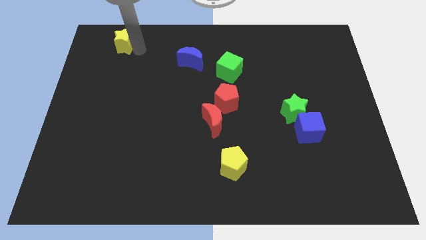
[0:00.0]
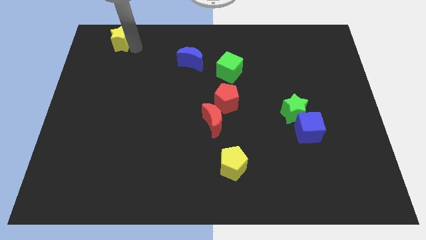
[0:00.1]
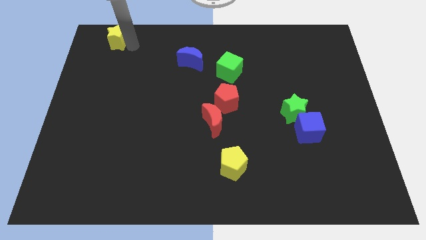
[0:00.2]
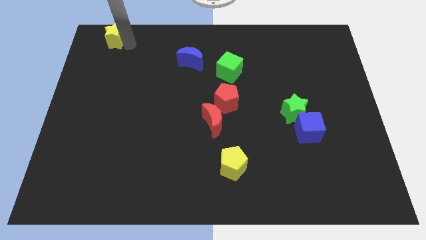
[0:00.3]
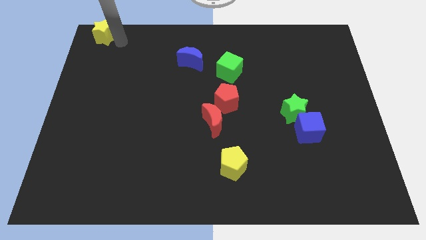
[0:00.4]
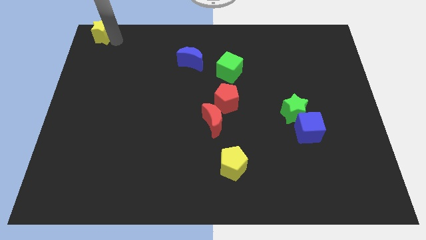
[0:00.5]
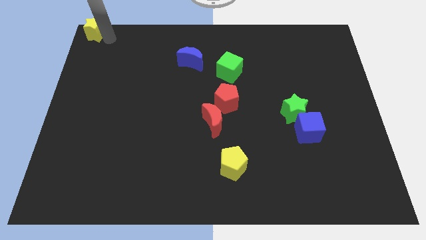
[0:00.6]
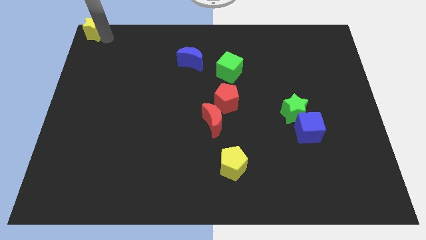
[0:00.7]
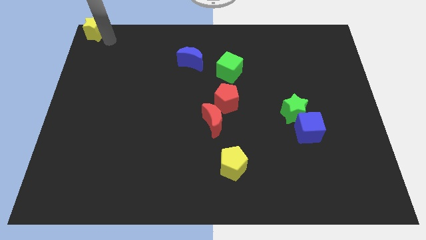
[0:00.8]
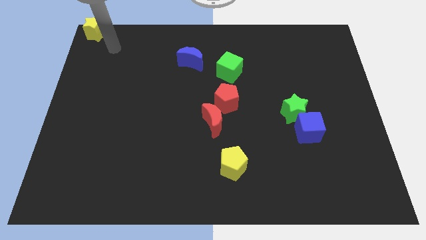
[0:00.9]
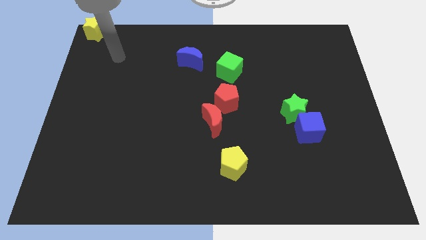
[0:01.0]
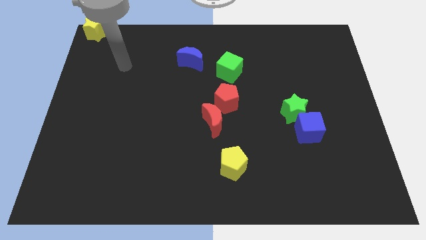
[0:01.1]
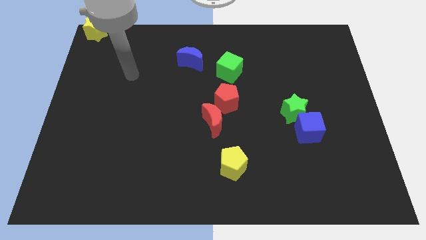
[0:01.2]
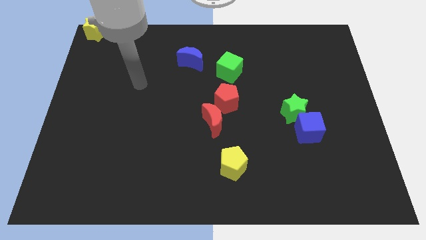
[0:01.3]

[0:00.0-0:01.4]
place the yellow star at the top left corner of the board

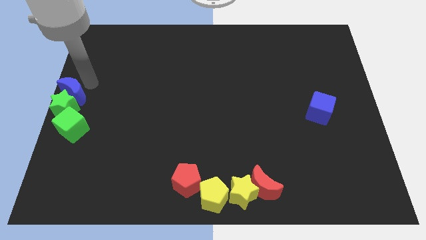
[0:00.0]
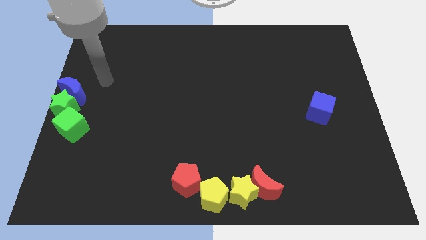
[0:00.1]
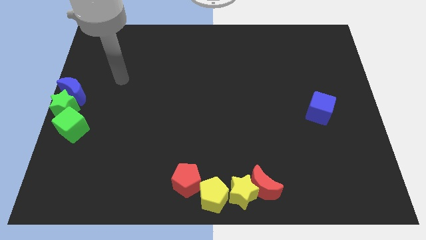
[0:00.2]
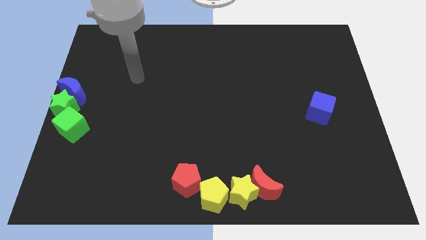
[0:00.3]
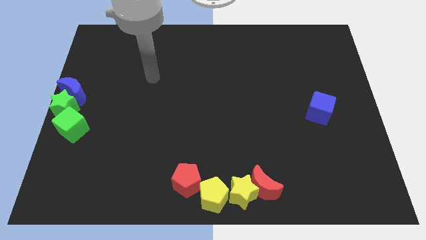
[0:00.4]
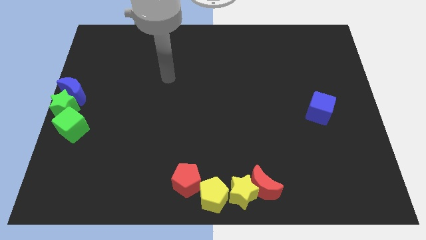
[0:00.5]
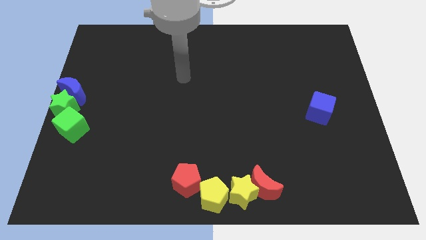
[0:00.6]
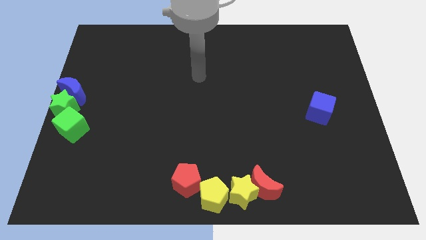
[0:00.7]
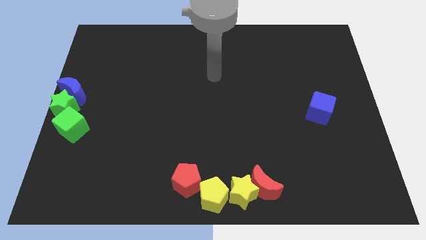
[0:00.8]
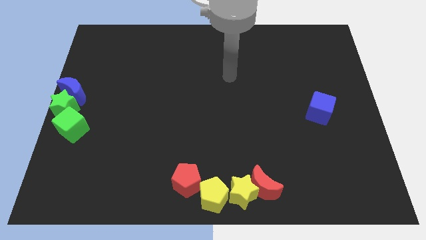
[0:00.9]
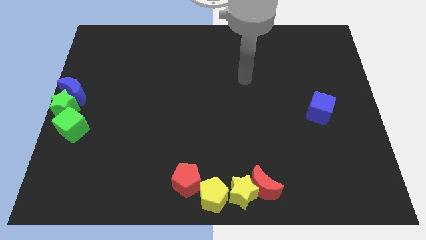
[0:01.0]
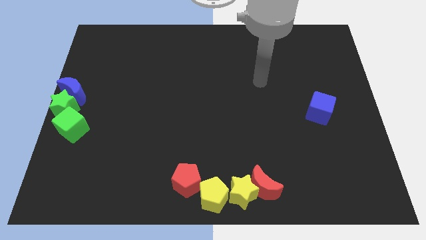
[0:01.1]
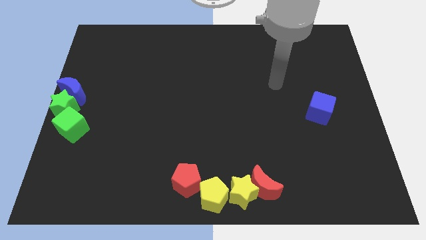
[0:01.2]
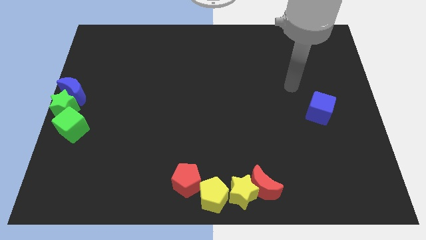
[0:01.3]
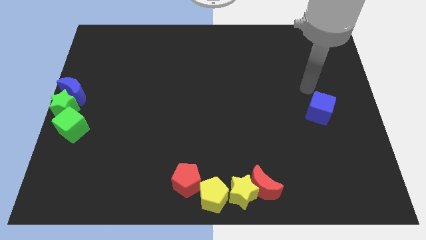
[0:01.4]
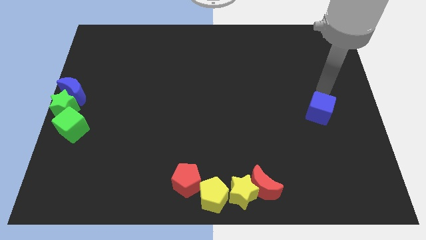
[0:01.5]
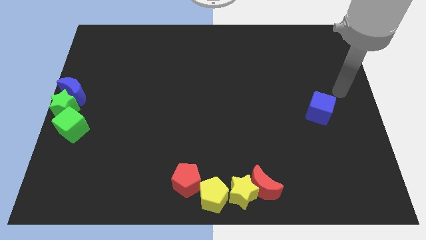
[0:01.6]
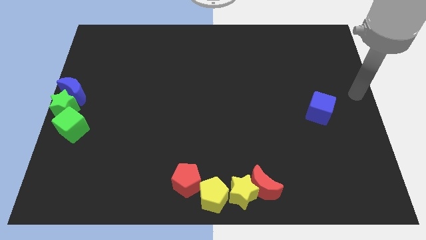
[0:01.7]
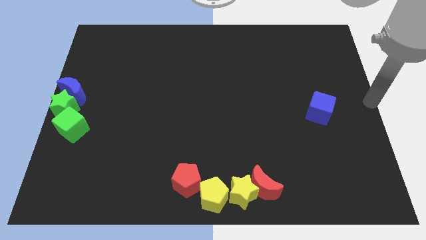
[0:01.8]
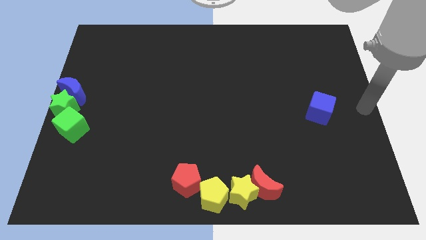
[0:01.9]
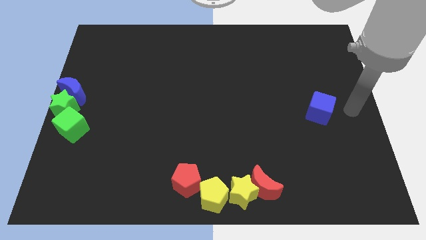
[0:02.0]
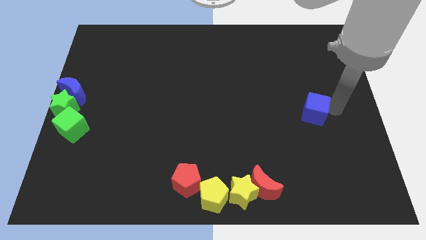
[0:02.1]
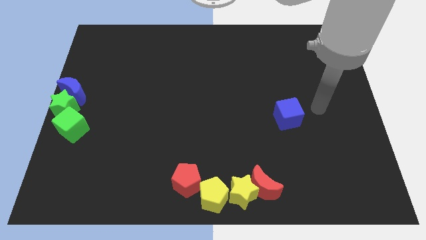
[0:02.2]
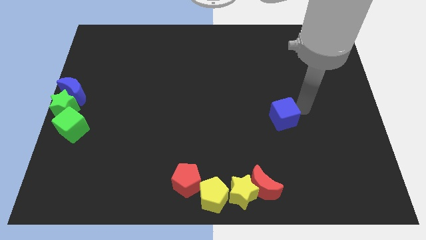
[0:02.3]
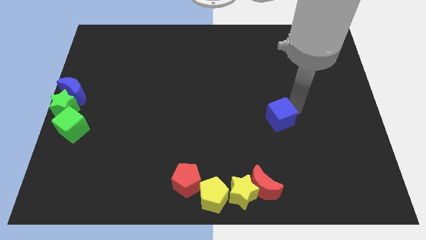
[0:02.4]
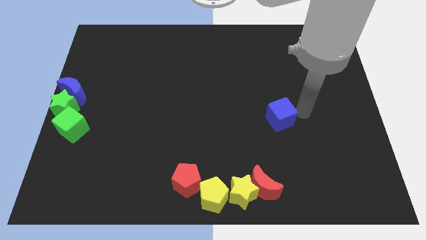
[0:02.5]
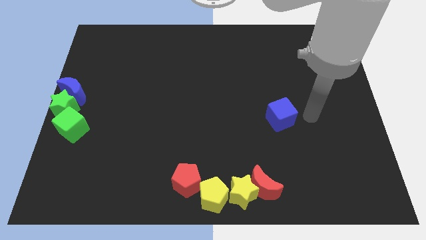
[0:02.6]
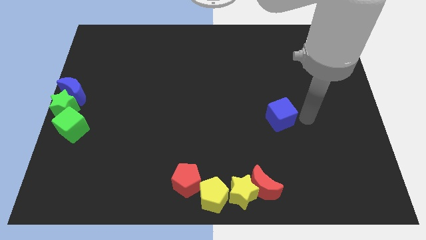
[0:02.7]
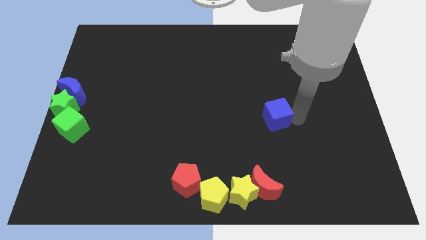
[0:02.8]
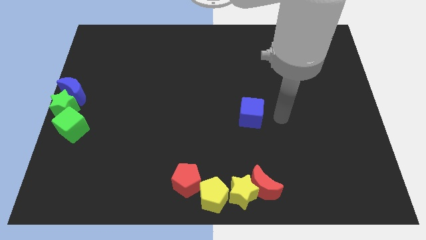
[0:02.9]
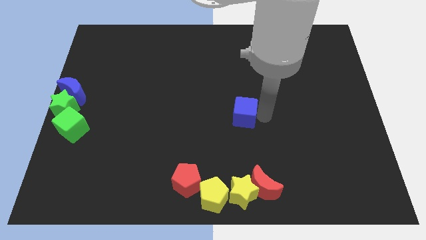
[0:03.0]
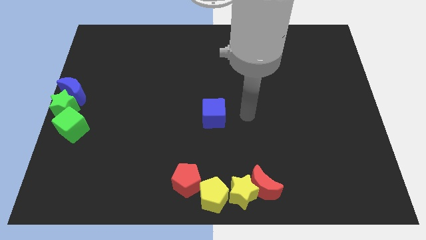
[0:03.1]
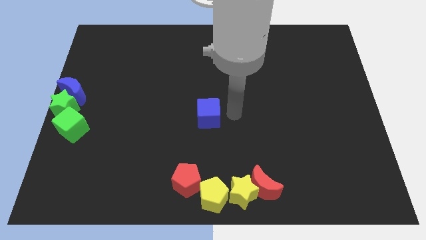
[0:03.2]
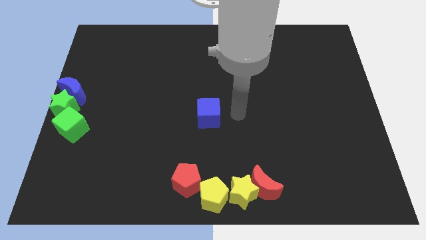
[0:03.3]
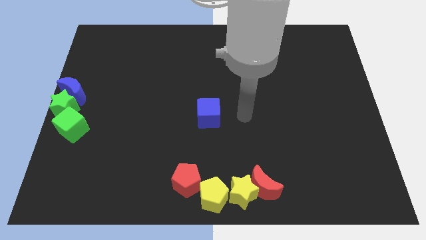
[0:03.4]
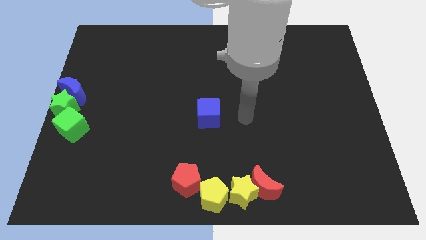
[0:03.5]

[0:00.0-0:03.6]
push the blue cube to the center of the board

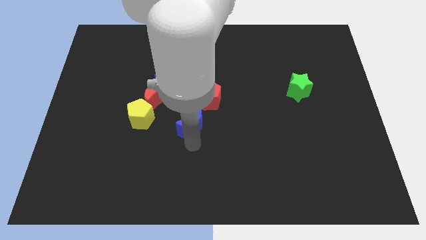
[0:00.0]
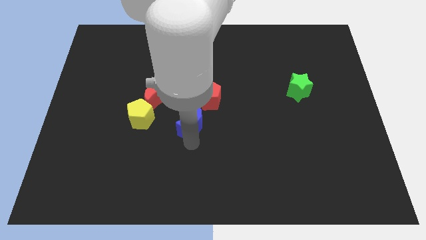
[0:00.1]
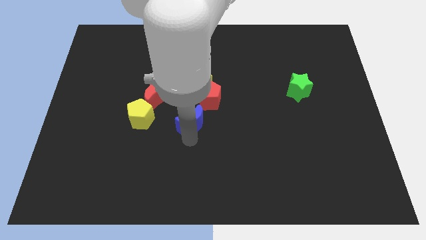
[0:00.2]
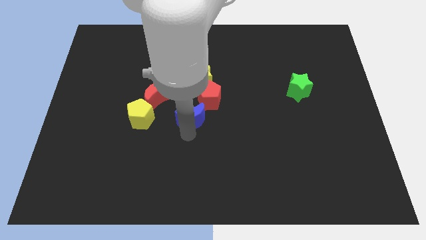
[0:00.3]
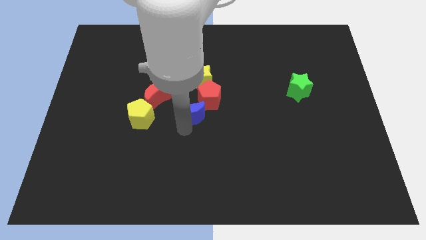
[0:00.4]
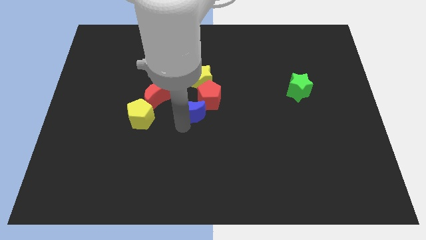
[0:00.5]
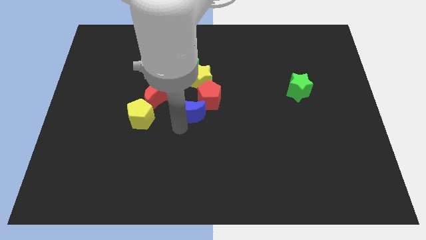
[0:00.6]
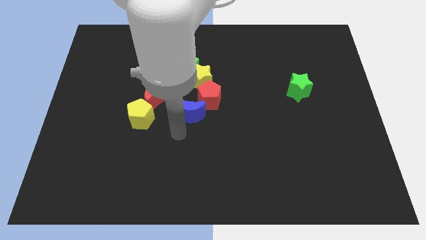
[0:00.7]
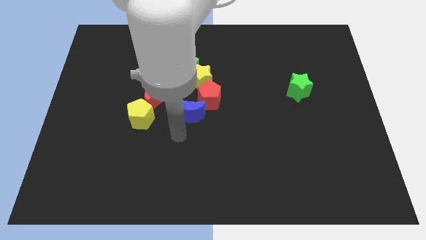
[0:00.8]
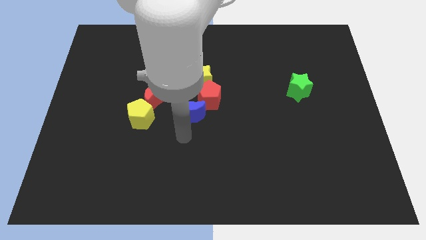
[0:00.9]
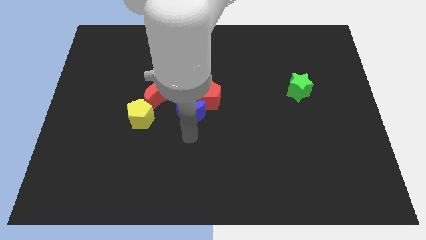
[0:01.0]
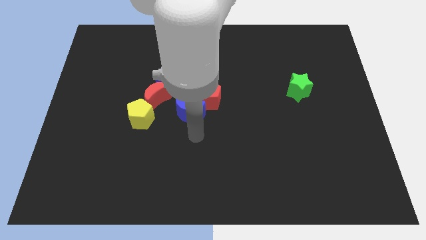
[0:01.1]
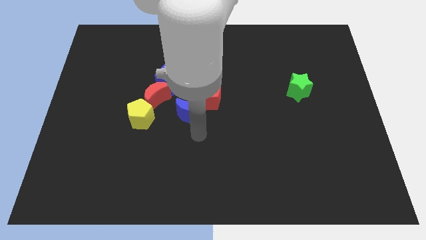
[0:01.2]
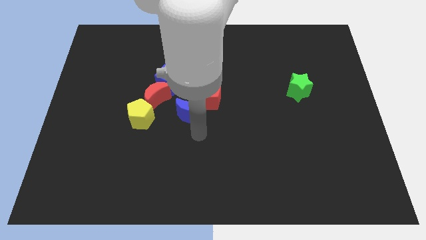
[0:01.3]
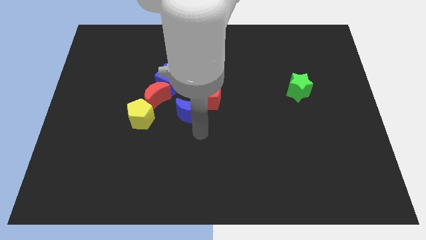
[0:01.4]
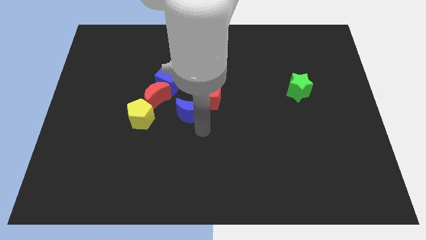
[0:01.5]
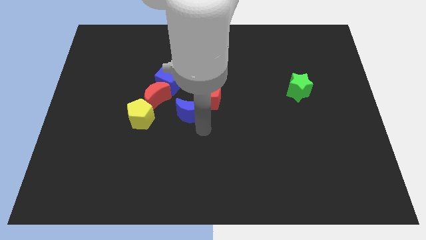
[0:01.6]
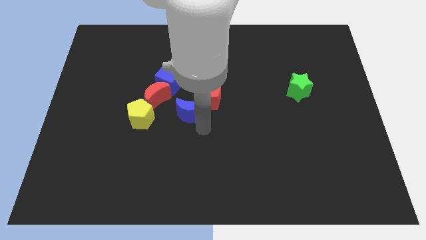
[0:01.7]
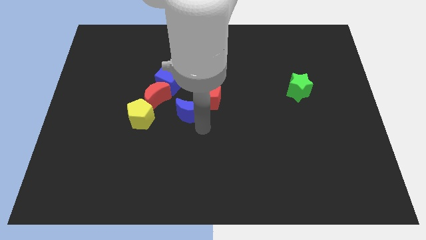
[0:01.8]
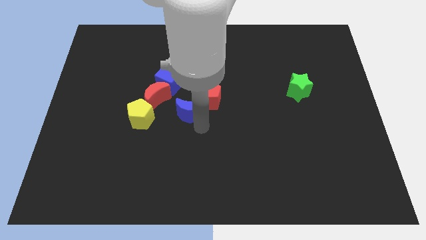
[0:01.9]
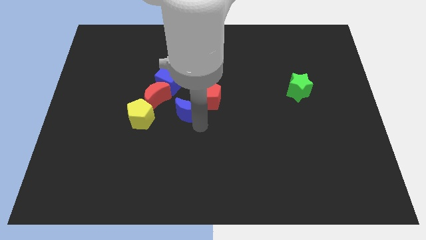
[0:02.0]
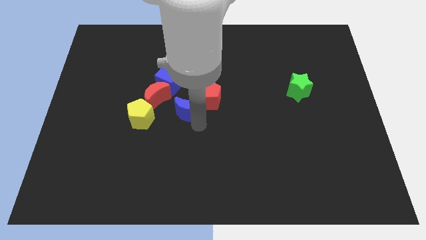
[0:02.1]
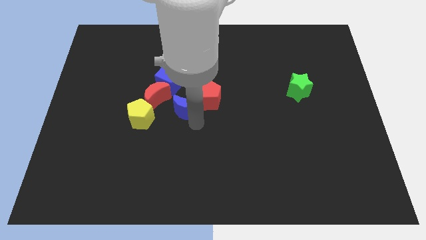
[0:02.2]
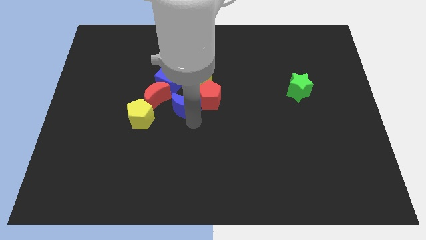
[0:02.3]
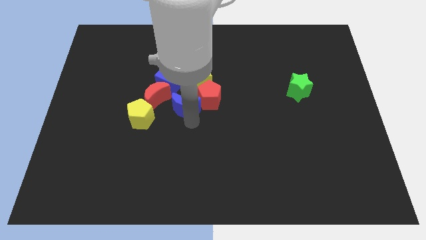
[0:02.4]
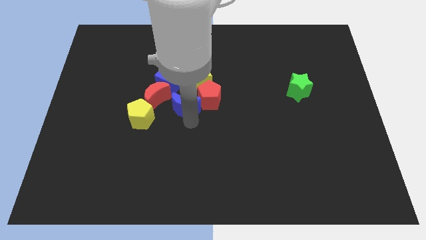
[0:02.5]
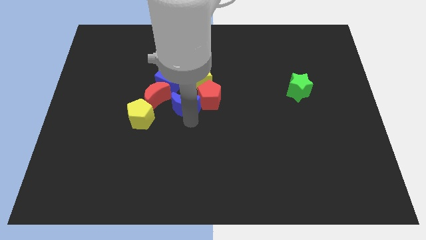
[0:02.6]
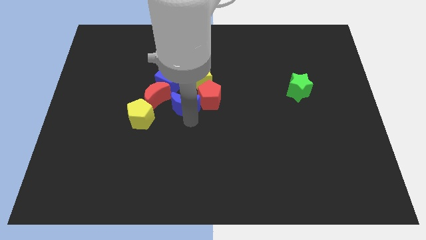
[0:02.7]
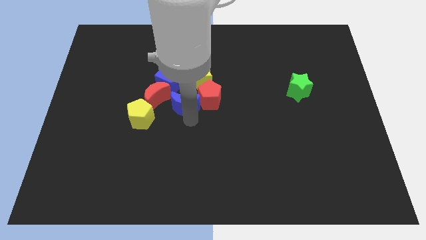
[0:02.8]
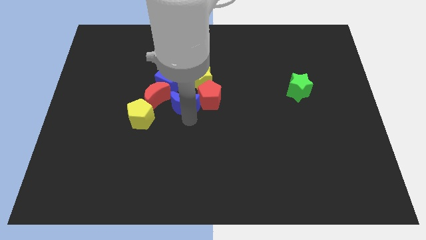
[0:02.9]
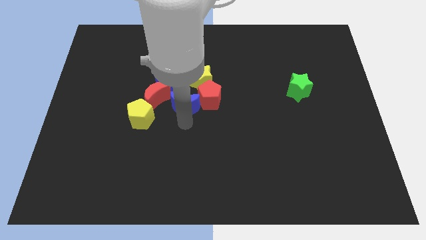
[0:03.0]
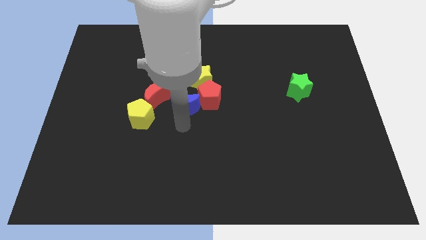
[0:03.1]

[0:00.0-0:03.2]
push the blue crescent left to the red pentagon

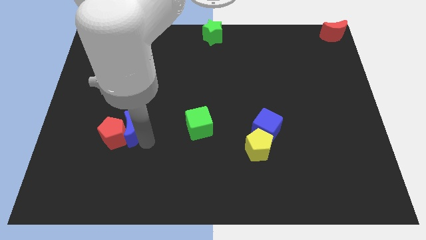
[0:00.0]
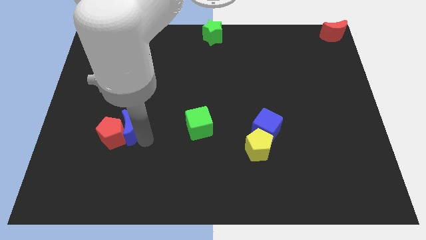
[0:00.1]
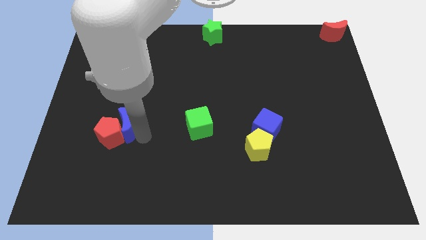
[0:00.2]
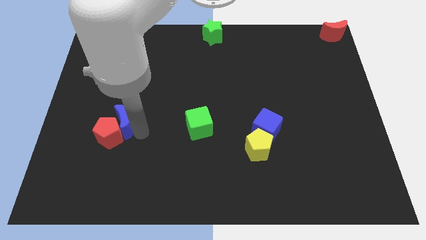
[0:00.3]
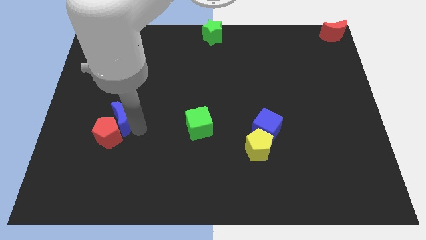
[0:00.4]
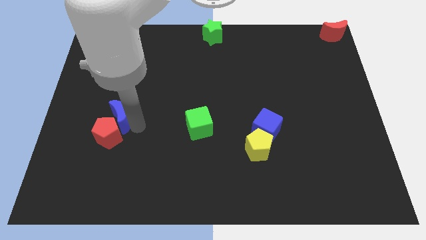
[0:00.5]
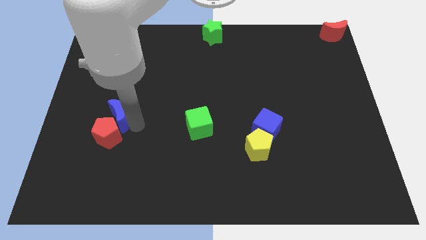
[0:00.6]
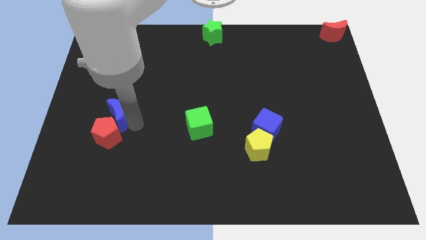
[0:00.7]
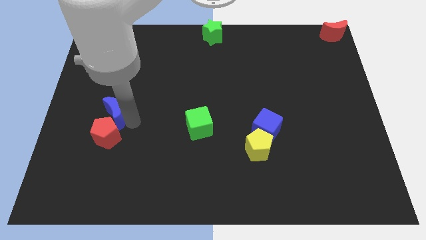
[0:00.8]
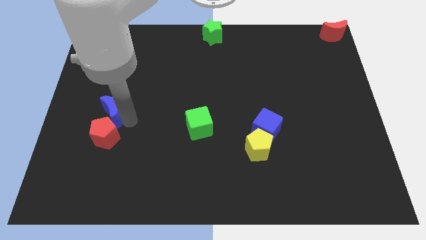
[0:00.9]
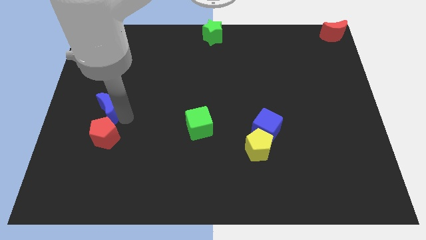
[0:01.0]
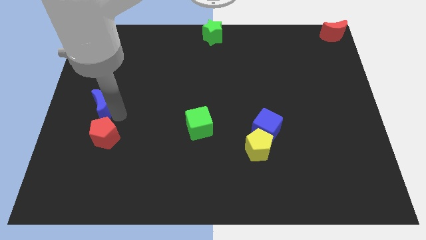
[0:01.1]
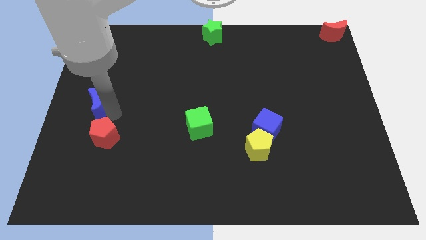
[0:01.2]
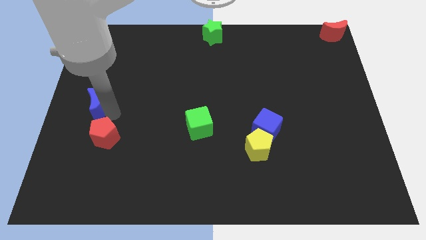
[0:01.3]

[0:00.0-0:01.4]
place the blue crescent above the red pentagon
